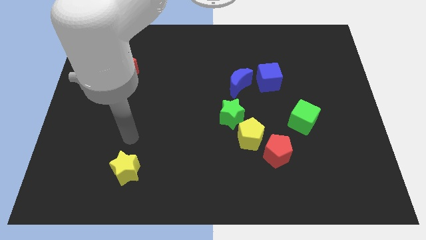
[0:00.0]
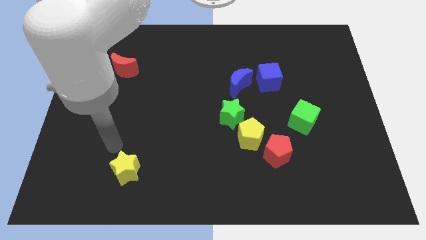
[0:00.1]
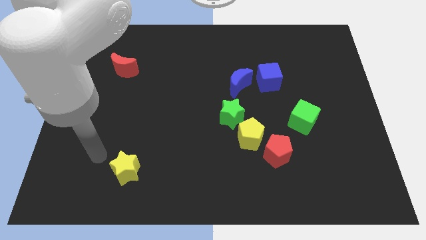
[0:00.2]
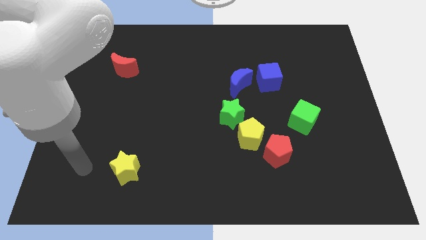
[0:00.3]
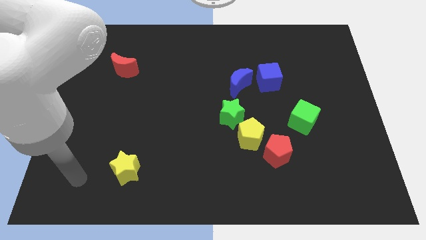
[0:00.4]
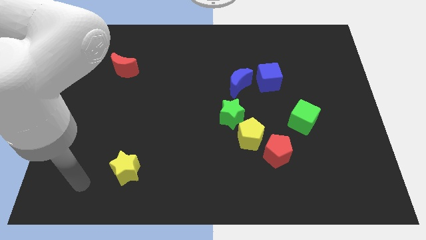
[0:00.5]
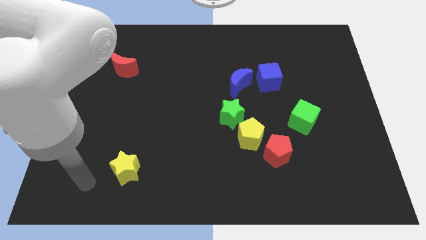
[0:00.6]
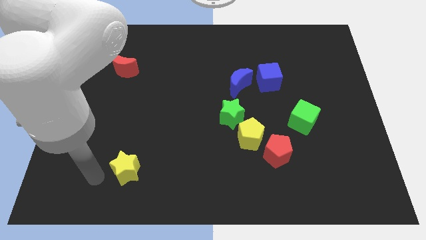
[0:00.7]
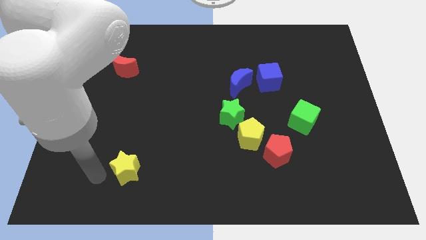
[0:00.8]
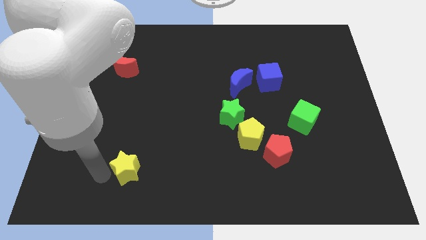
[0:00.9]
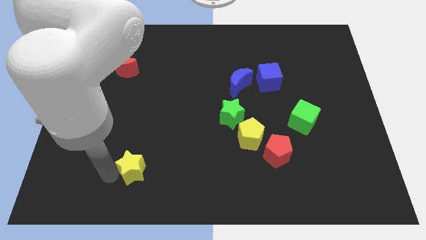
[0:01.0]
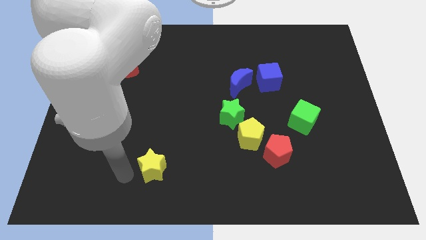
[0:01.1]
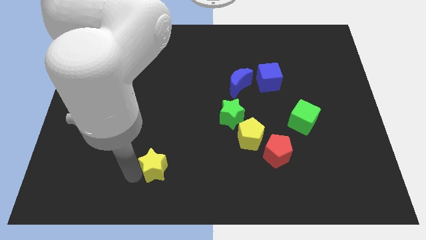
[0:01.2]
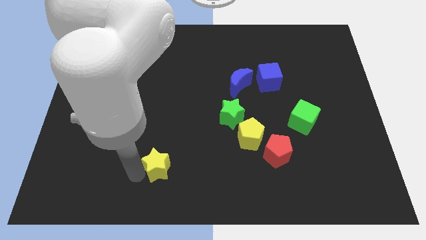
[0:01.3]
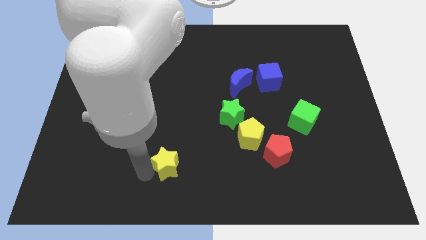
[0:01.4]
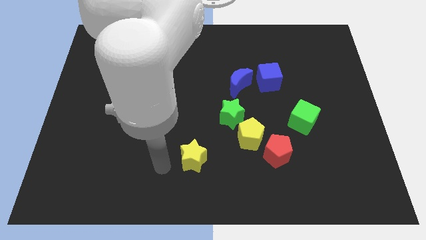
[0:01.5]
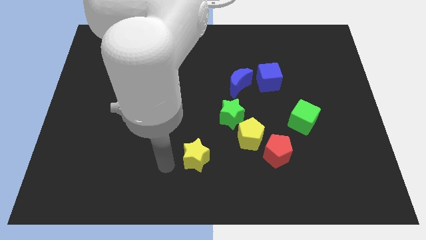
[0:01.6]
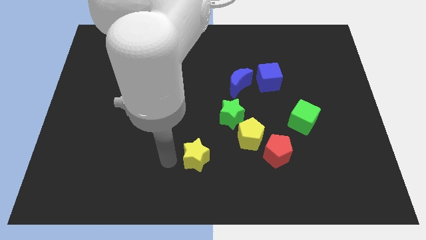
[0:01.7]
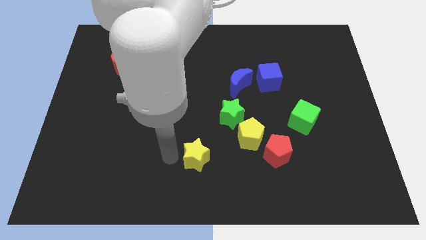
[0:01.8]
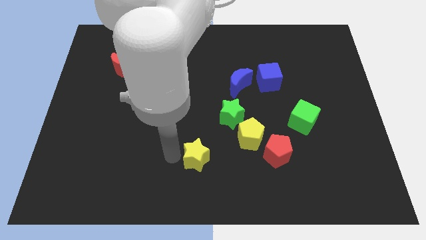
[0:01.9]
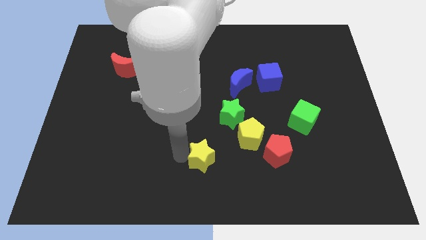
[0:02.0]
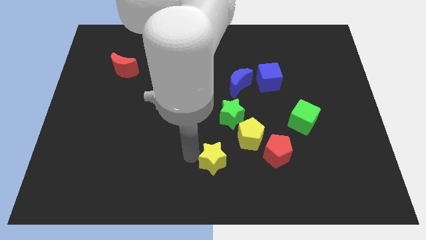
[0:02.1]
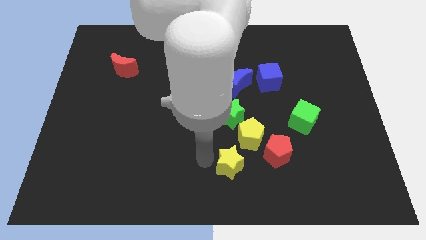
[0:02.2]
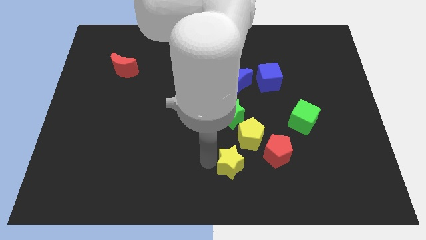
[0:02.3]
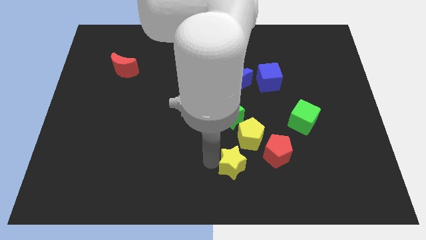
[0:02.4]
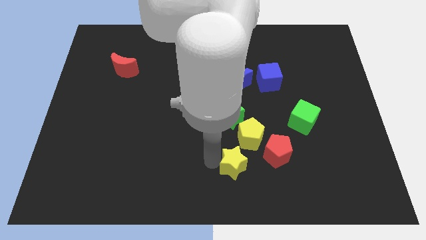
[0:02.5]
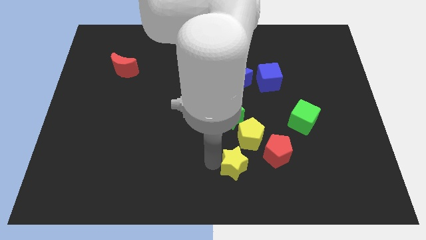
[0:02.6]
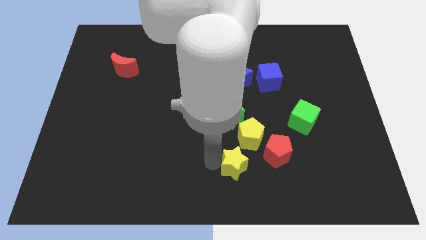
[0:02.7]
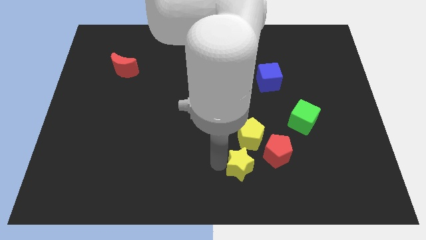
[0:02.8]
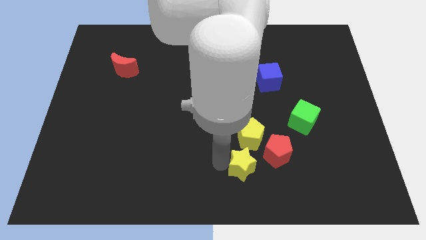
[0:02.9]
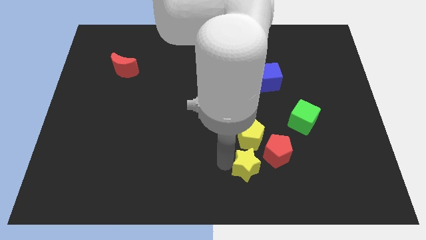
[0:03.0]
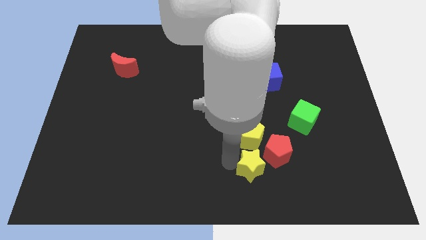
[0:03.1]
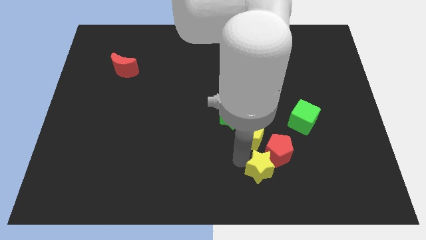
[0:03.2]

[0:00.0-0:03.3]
push the yellow star to the bottom side of the yellow pentagon

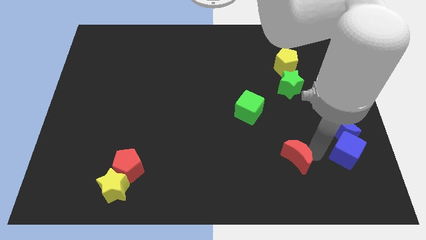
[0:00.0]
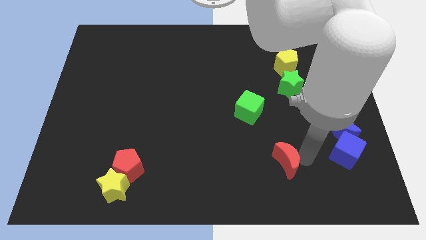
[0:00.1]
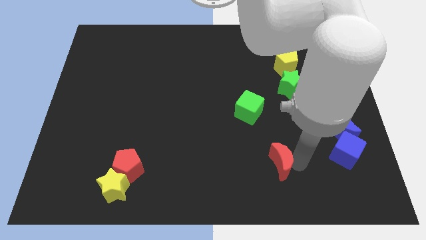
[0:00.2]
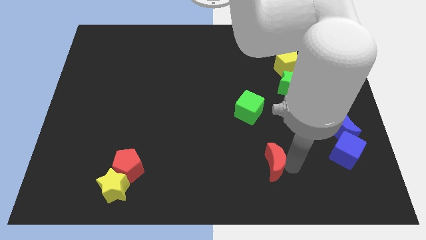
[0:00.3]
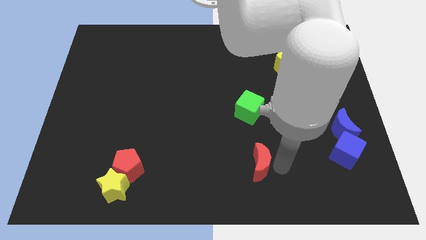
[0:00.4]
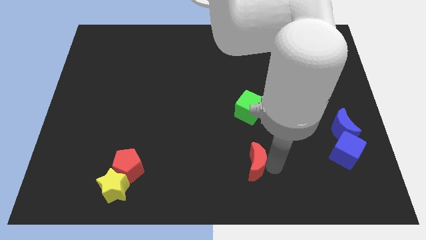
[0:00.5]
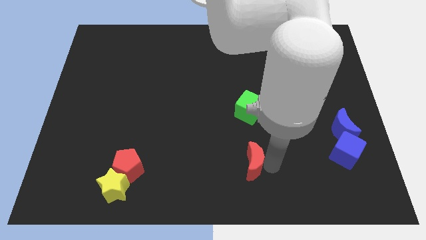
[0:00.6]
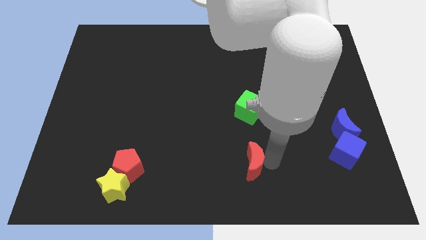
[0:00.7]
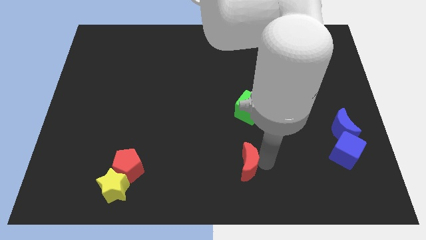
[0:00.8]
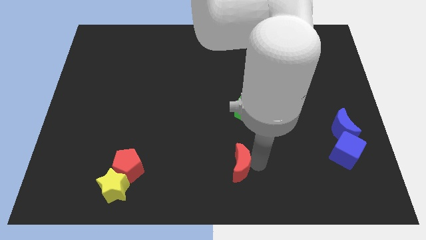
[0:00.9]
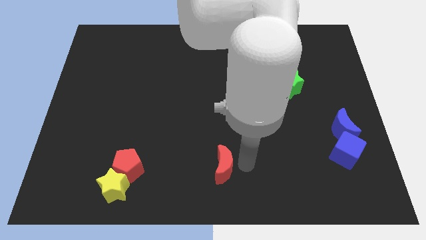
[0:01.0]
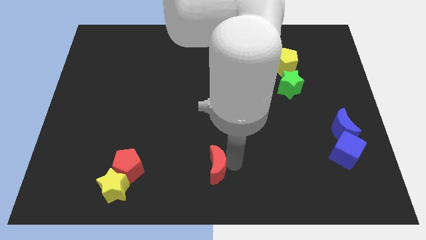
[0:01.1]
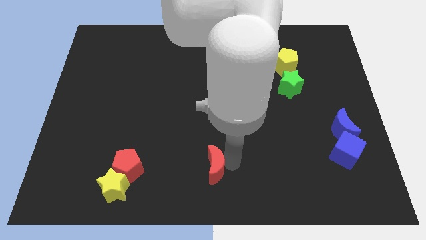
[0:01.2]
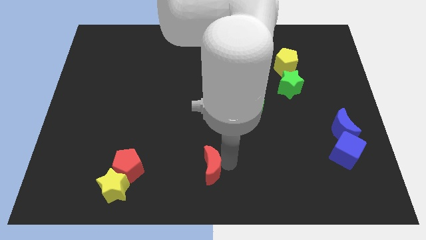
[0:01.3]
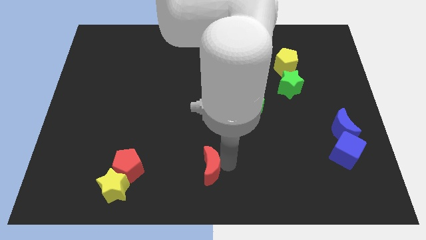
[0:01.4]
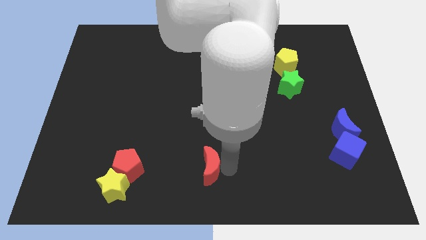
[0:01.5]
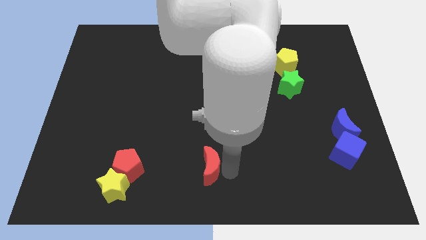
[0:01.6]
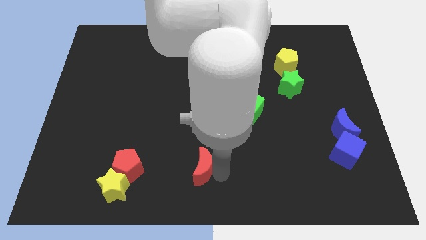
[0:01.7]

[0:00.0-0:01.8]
move the red crescent near the bottom center of the board

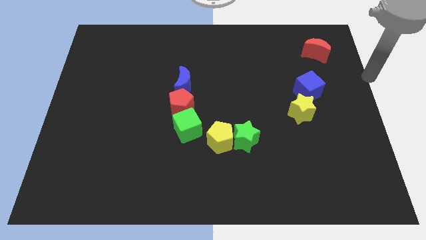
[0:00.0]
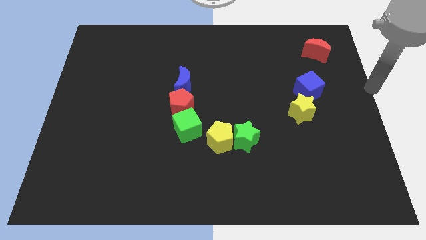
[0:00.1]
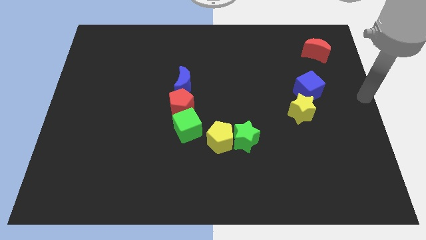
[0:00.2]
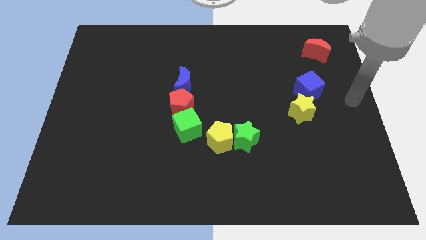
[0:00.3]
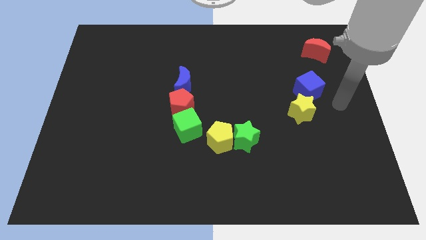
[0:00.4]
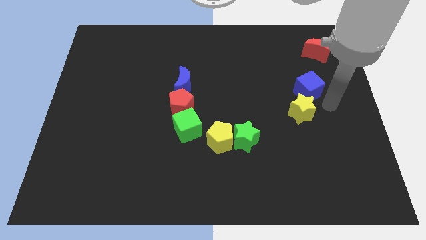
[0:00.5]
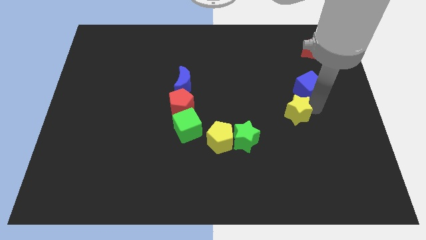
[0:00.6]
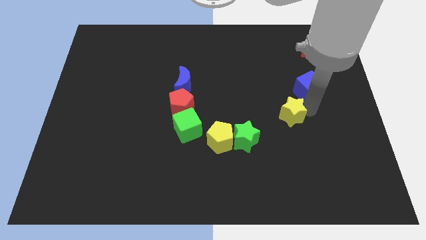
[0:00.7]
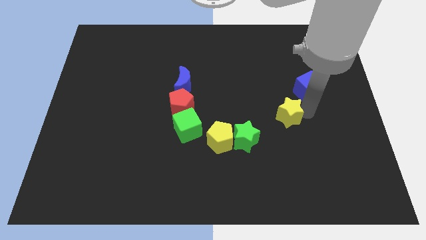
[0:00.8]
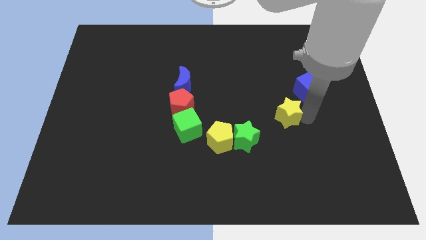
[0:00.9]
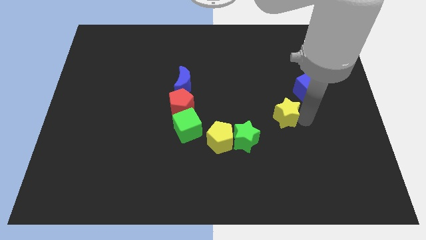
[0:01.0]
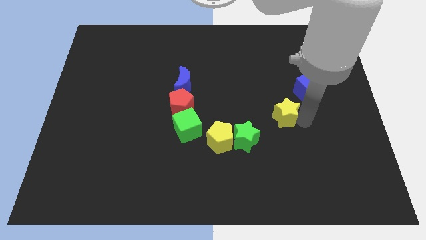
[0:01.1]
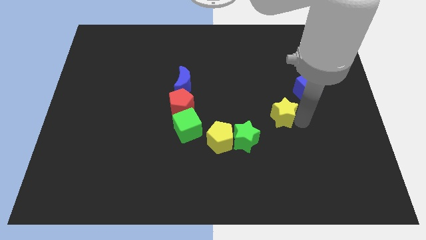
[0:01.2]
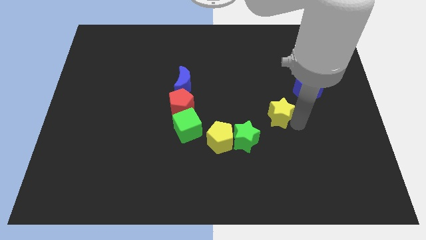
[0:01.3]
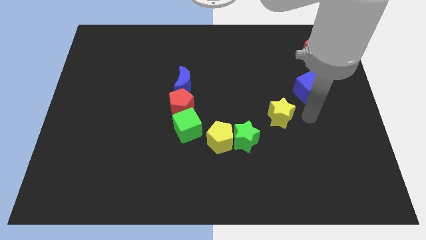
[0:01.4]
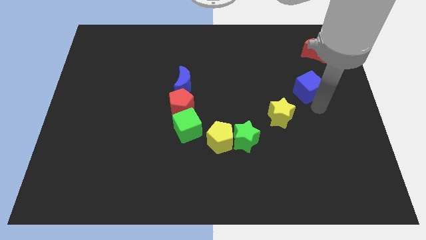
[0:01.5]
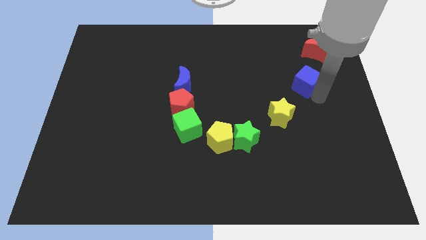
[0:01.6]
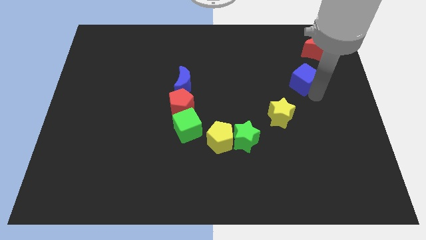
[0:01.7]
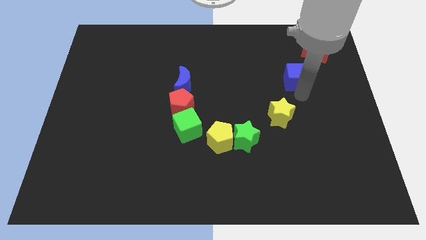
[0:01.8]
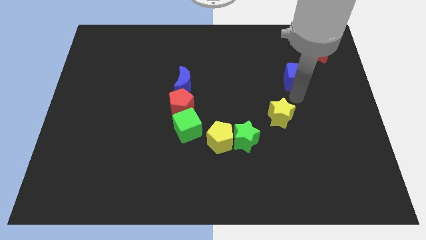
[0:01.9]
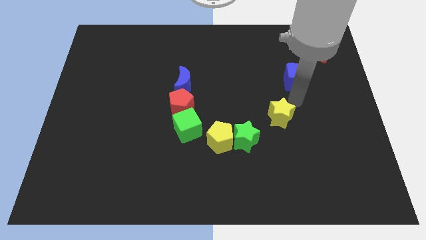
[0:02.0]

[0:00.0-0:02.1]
separate yellow star and blue cube

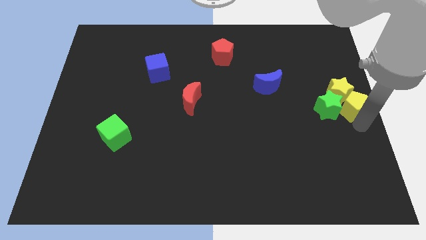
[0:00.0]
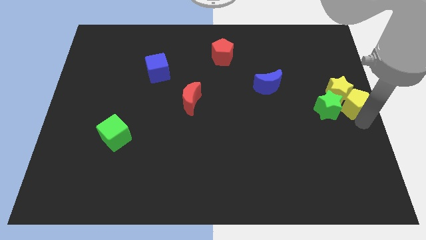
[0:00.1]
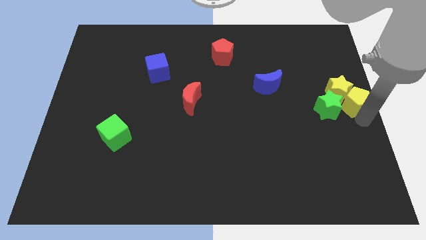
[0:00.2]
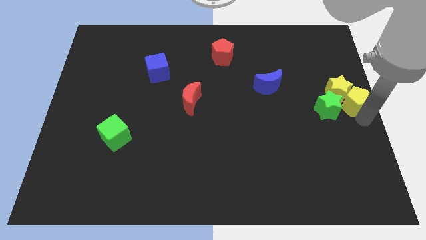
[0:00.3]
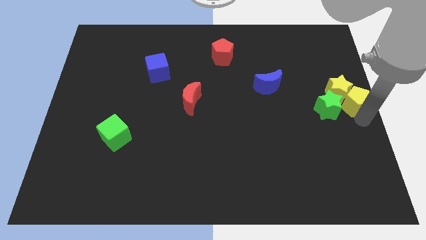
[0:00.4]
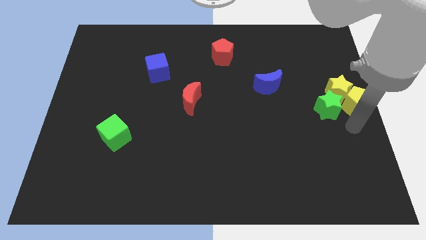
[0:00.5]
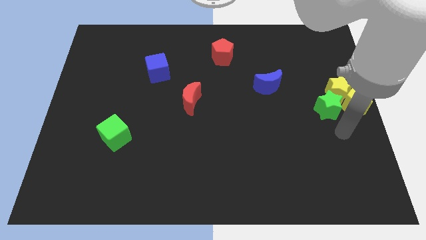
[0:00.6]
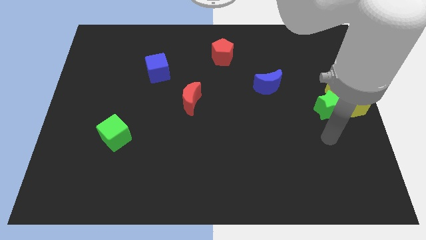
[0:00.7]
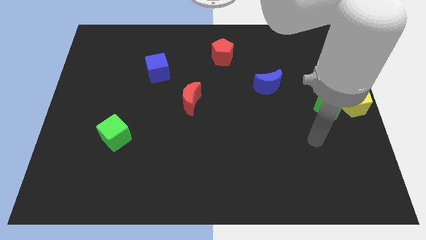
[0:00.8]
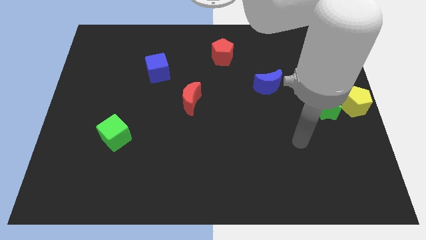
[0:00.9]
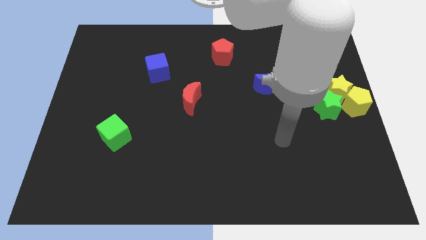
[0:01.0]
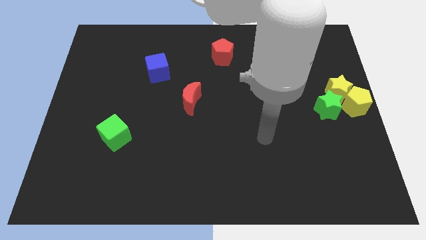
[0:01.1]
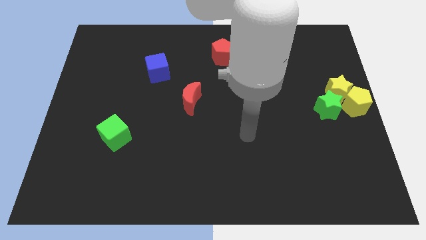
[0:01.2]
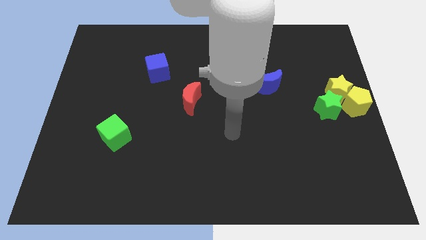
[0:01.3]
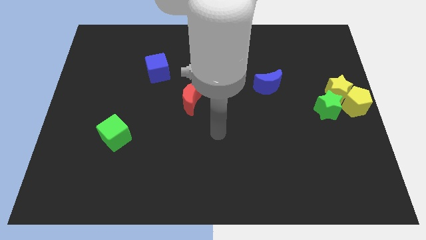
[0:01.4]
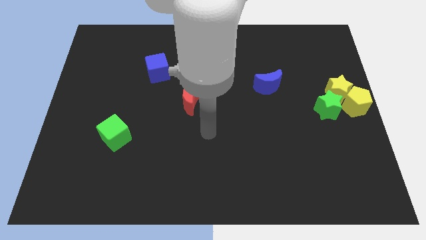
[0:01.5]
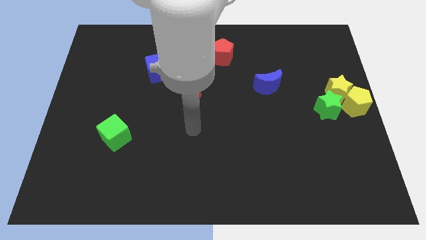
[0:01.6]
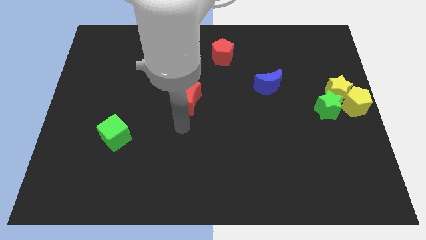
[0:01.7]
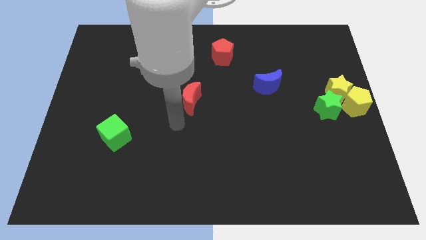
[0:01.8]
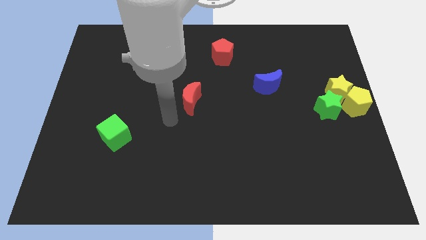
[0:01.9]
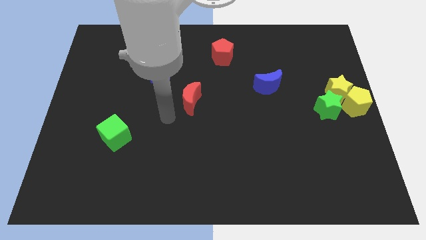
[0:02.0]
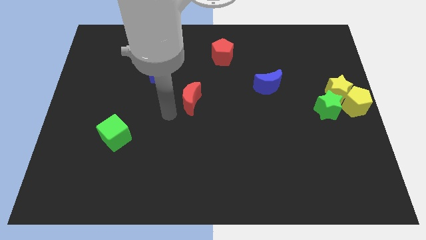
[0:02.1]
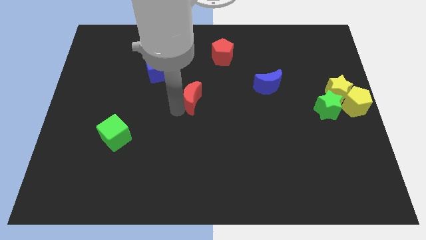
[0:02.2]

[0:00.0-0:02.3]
move your arm to the left of red moon
